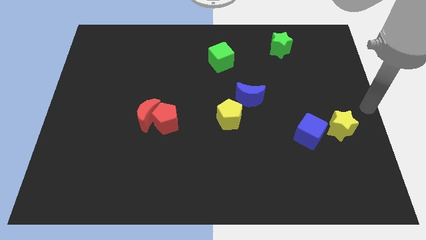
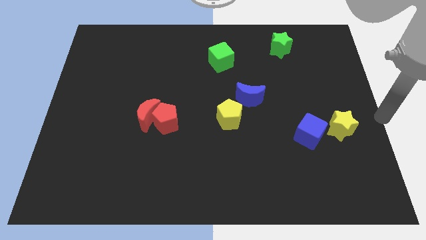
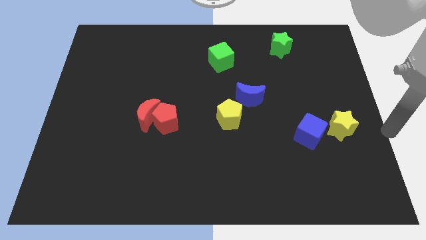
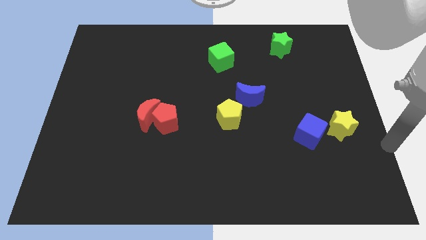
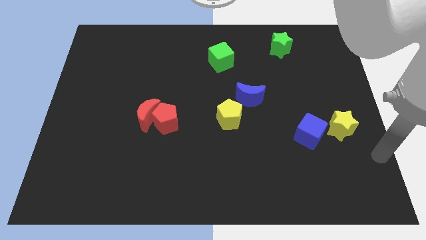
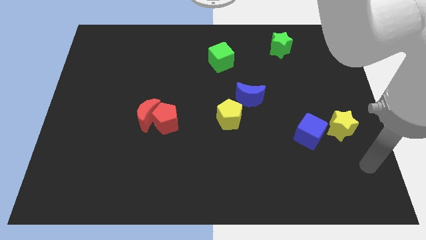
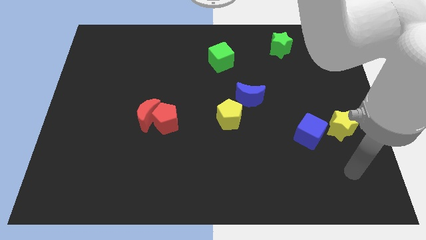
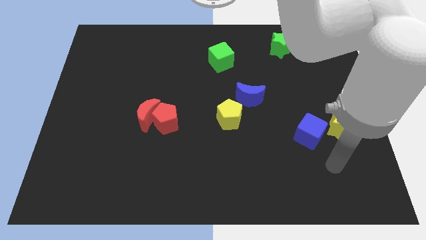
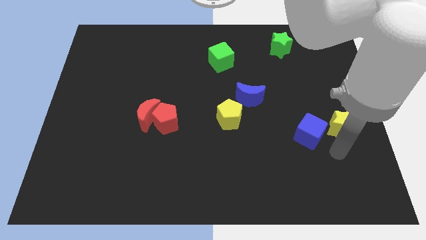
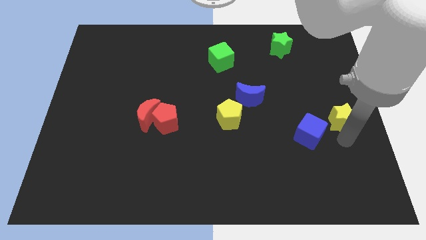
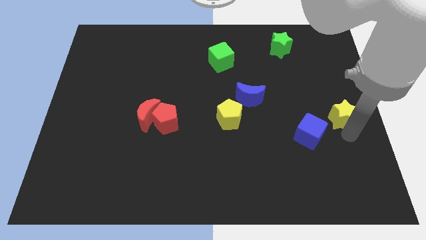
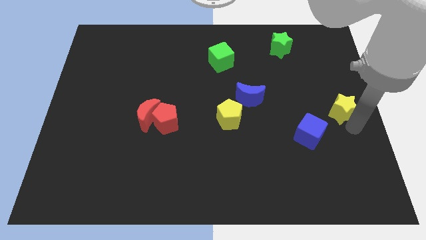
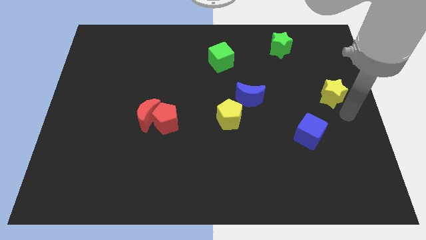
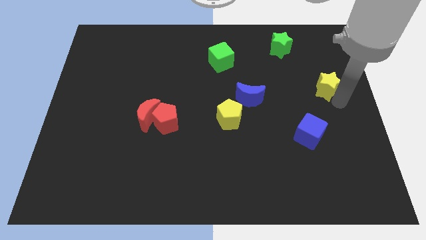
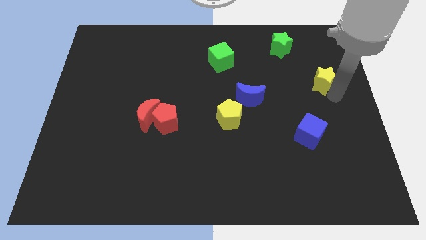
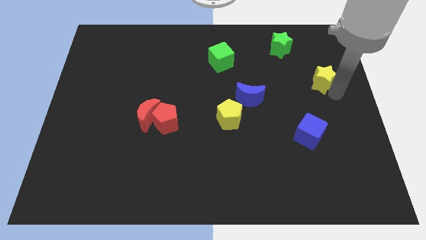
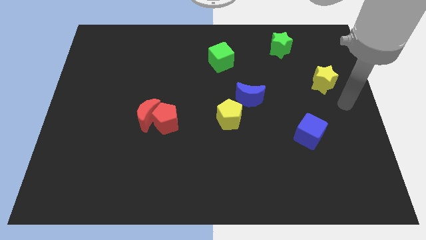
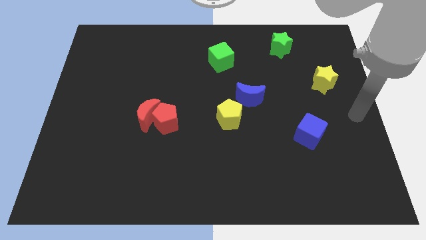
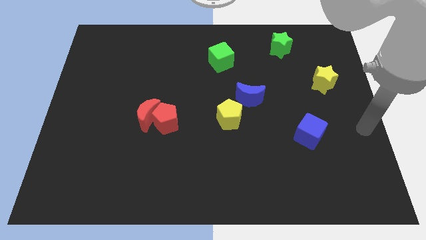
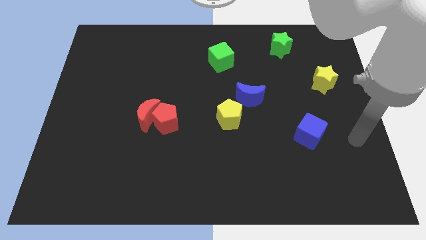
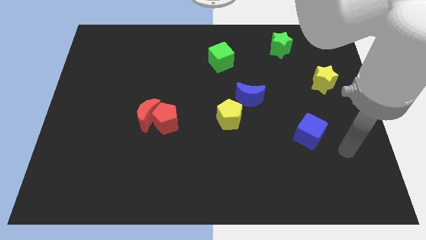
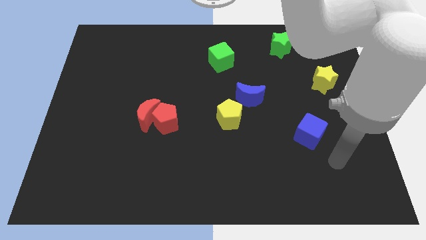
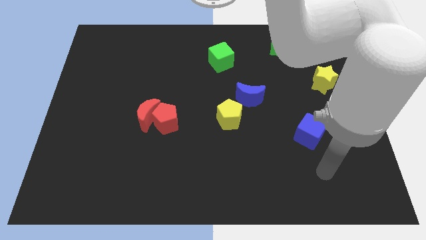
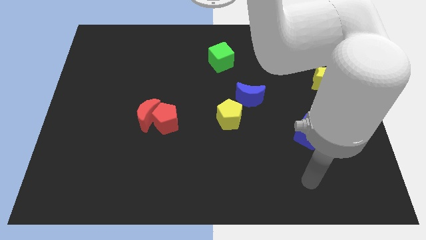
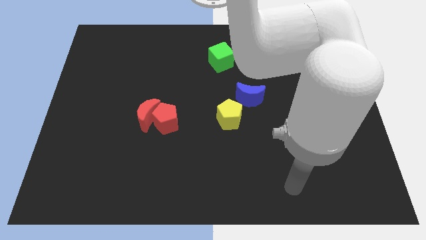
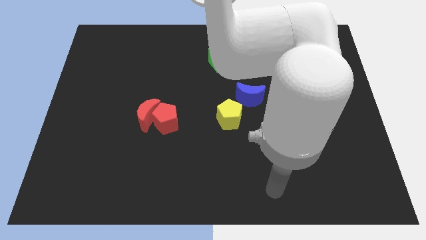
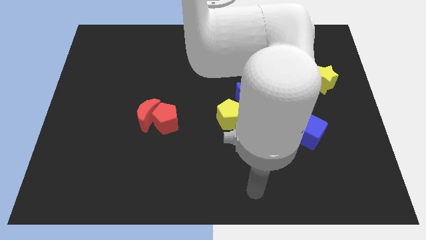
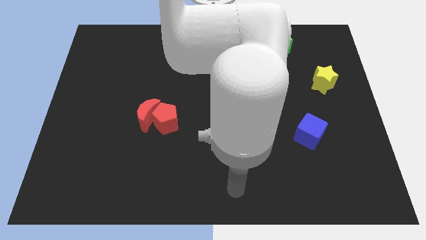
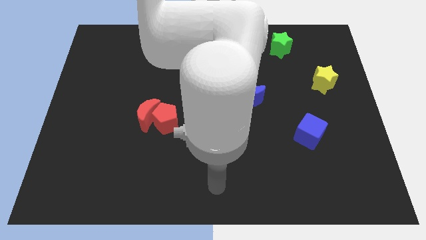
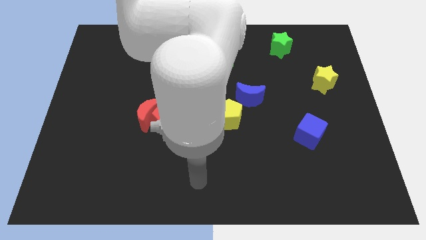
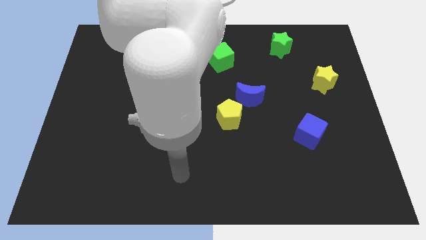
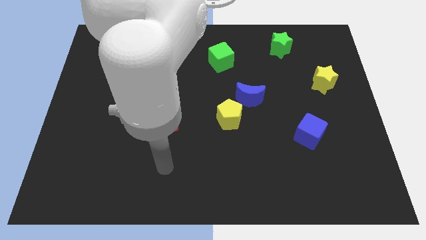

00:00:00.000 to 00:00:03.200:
push yellow star slightly upward

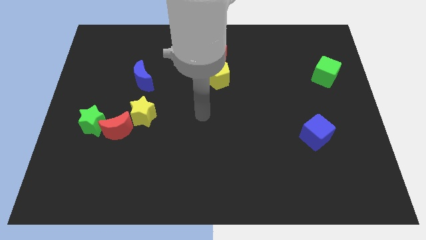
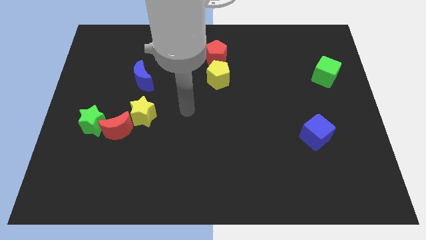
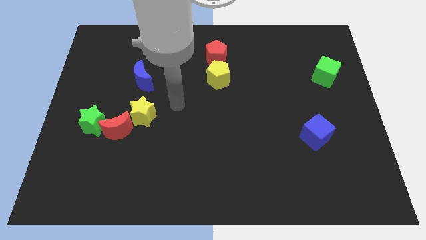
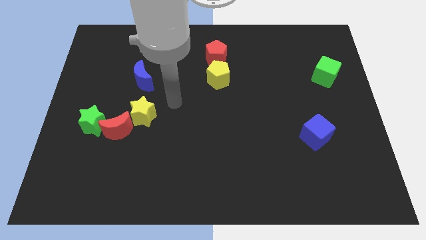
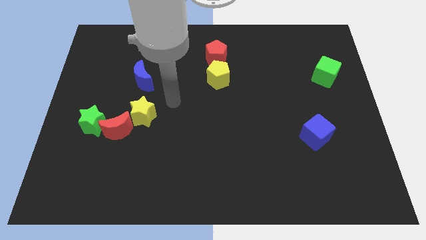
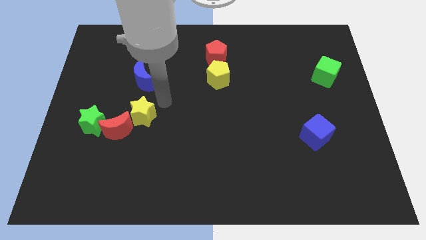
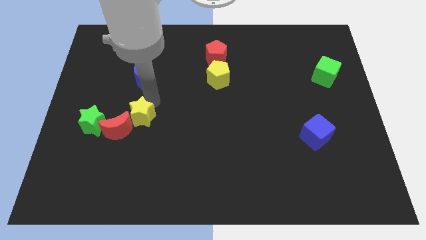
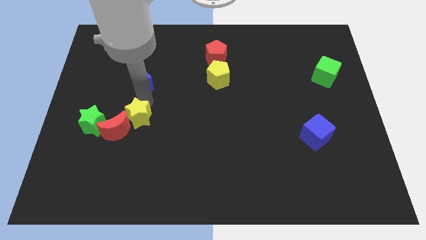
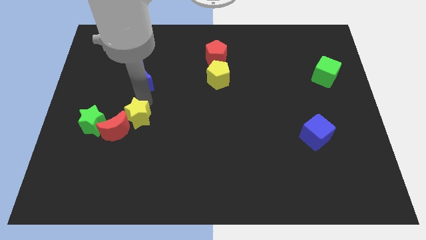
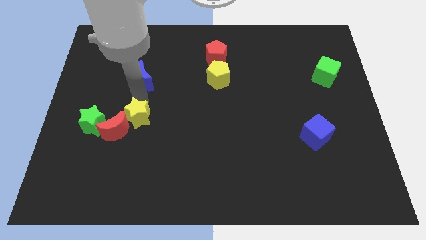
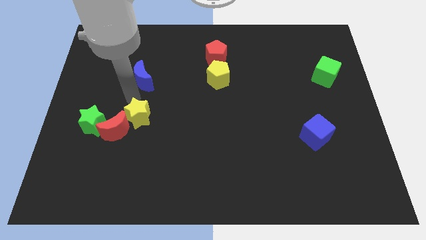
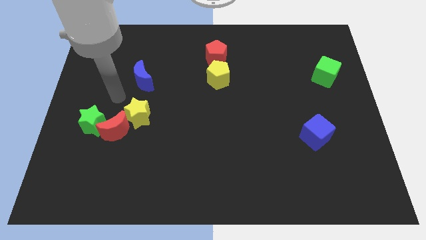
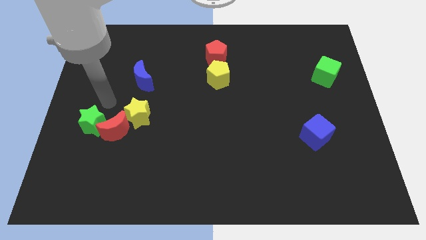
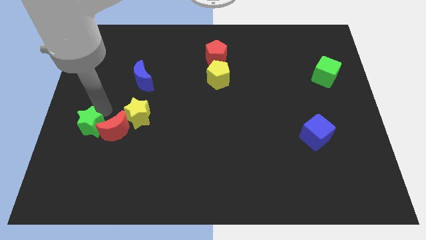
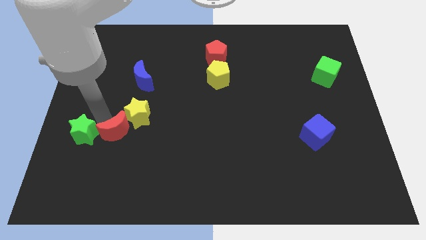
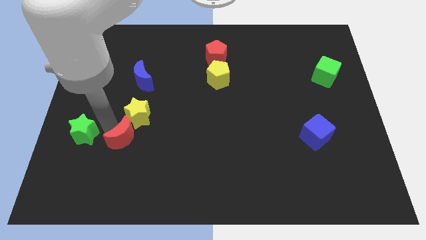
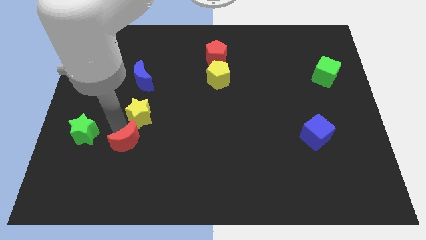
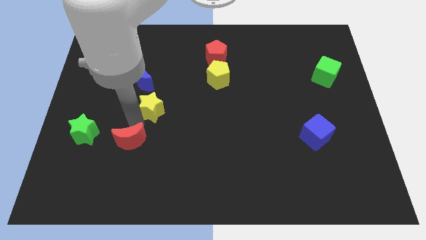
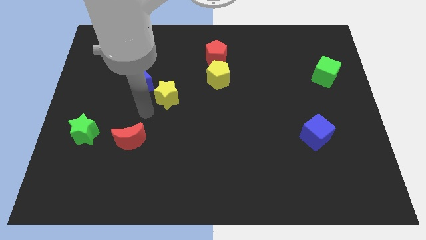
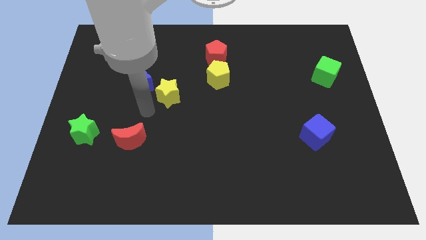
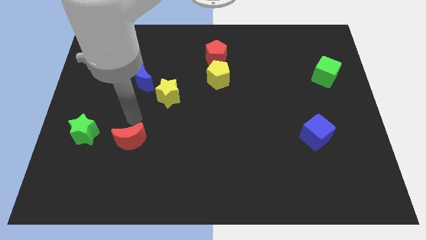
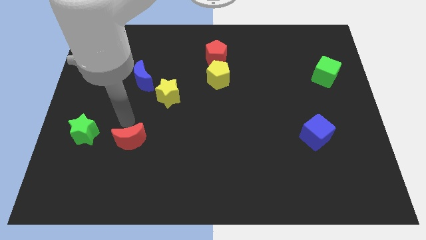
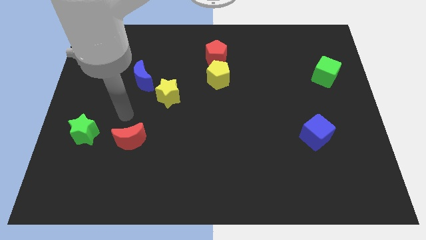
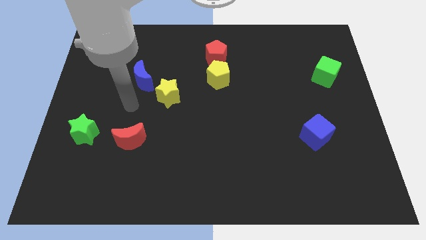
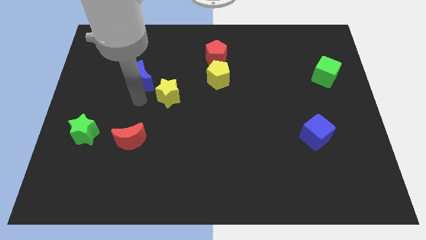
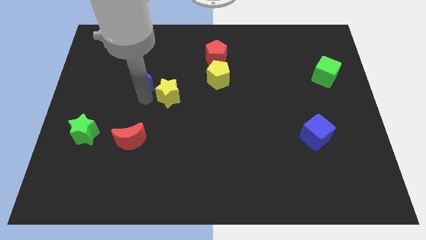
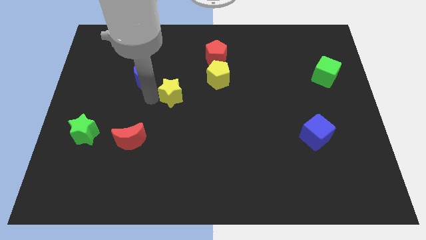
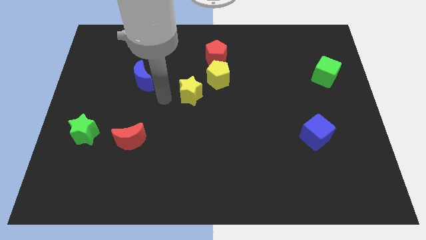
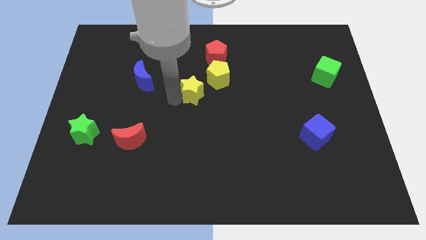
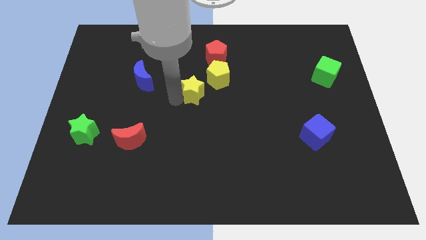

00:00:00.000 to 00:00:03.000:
slide yellow star diagonally on the bottom left side of the yellow pentagon

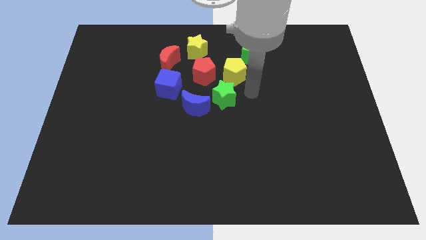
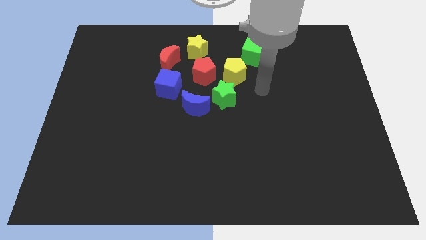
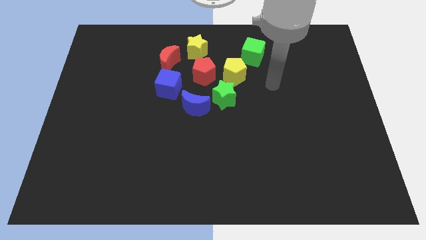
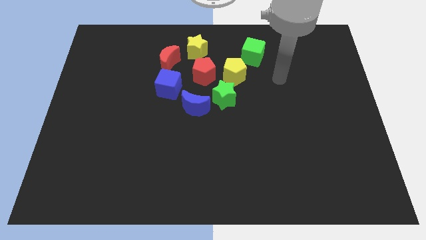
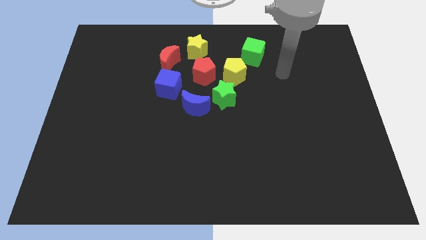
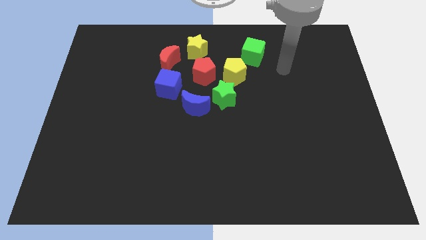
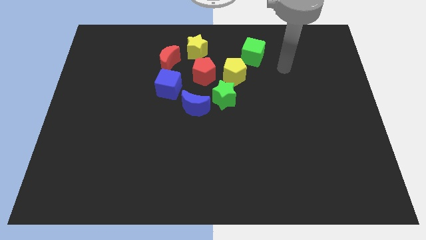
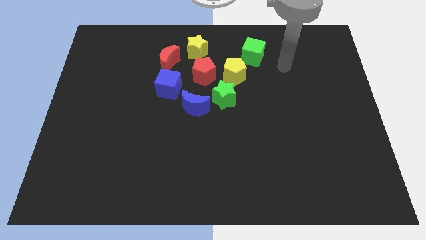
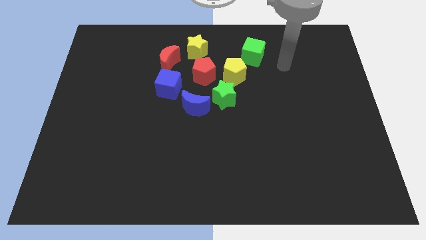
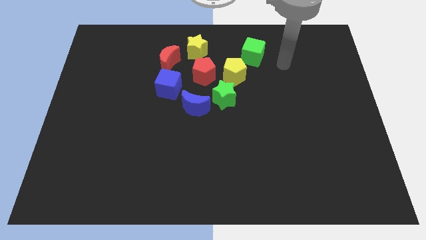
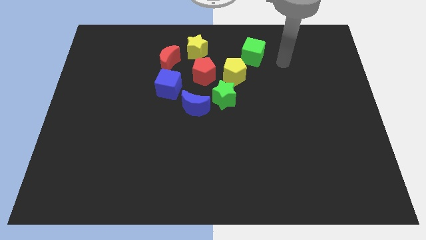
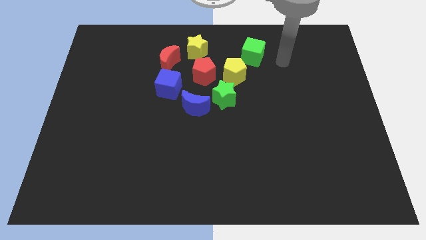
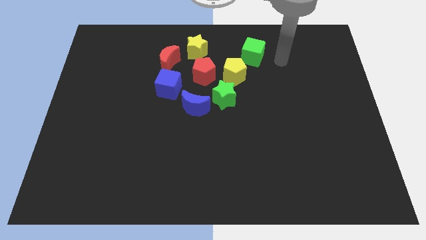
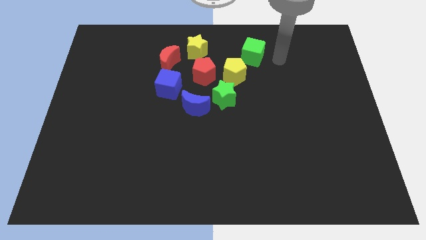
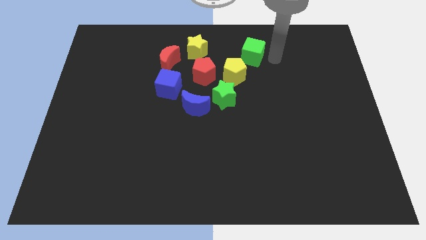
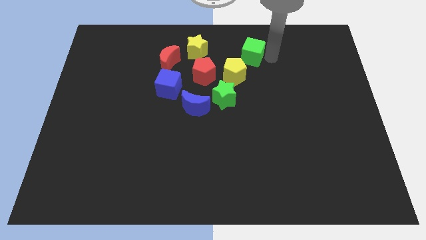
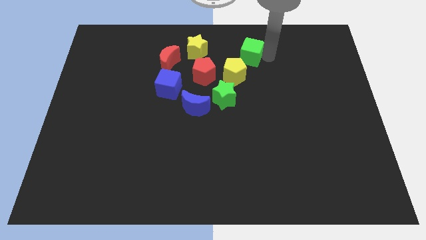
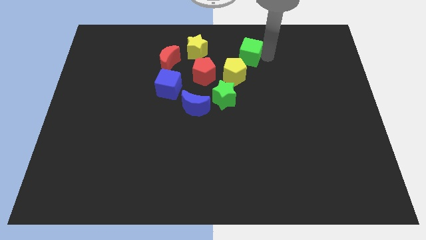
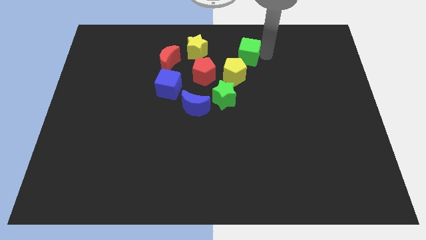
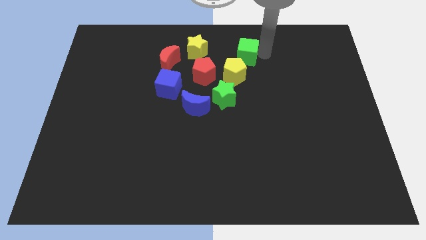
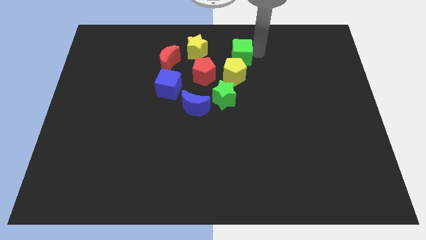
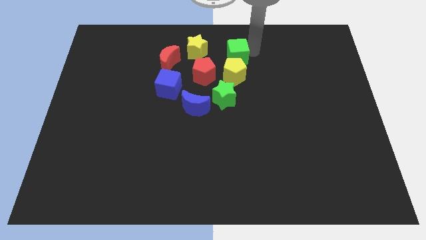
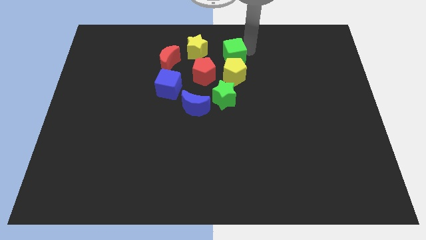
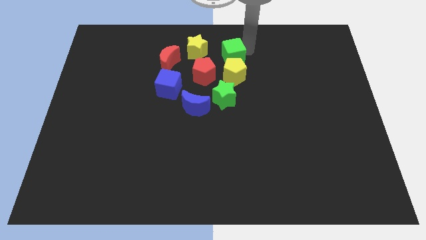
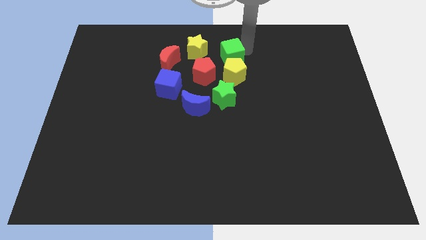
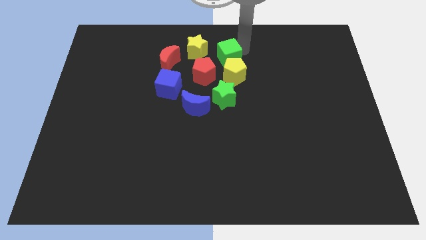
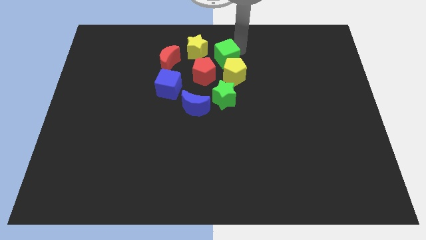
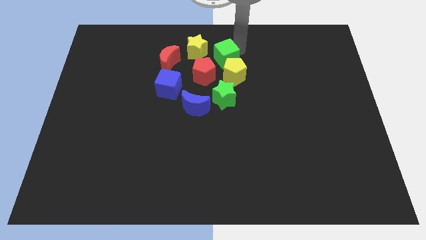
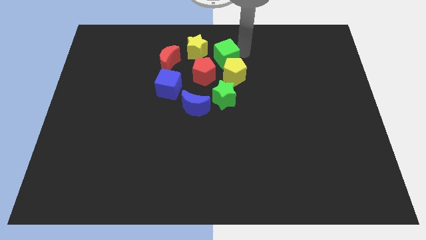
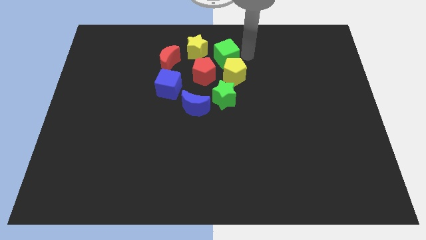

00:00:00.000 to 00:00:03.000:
move the green cube diagonal to the red pentagon
